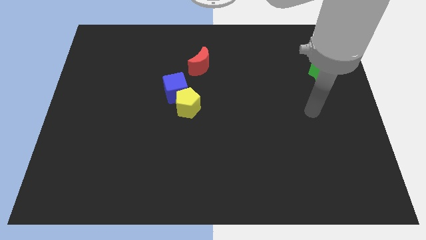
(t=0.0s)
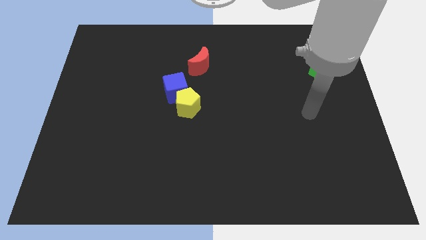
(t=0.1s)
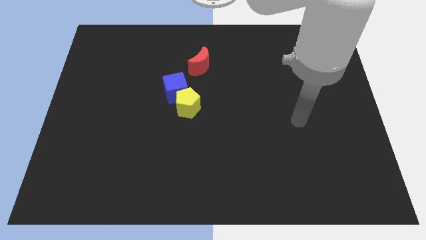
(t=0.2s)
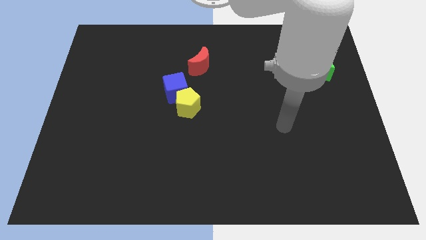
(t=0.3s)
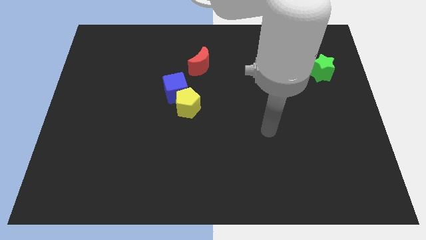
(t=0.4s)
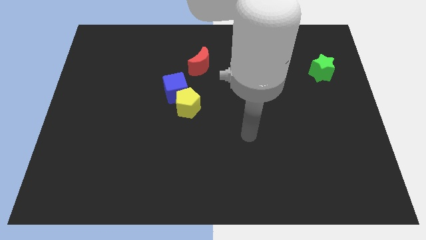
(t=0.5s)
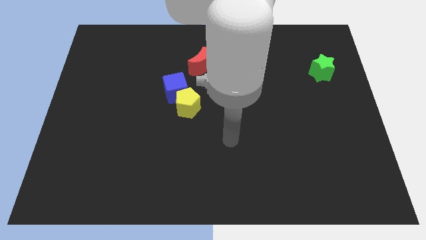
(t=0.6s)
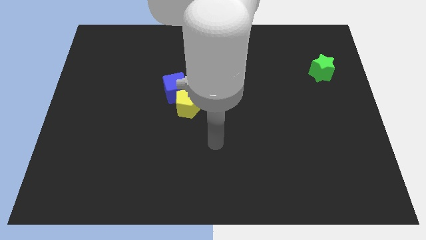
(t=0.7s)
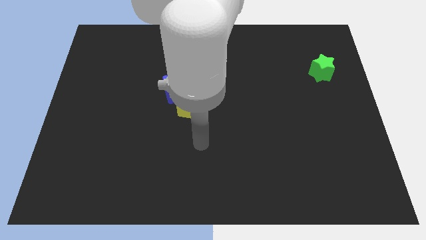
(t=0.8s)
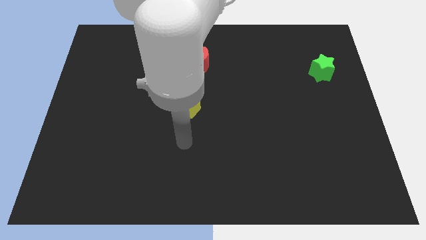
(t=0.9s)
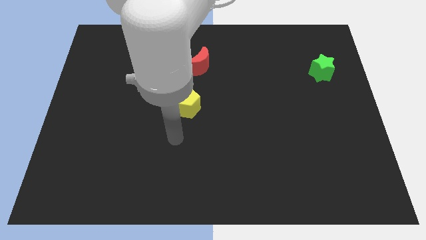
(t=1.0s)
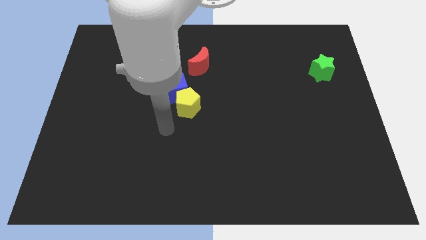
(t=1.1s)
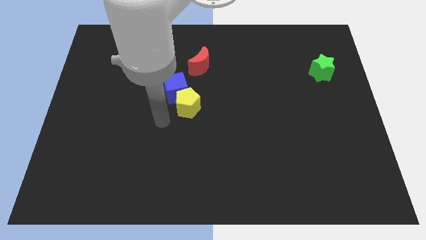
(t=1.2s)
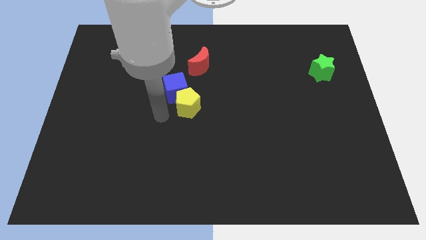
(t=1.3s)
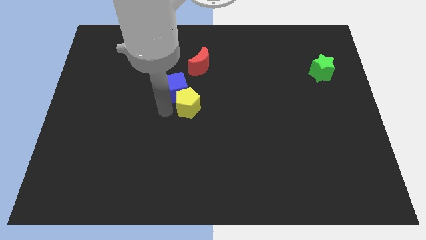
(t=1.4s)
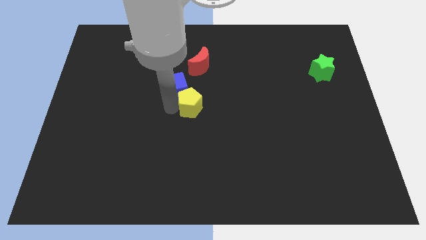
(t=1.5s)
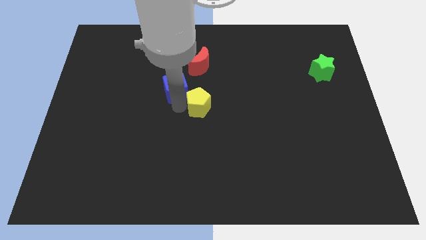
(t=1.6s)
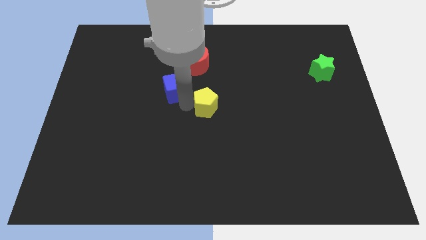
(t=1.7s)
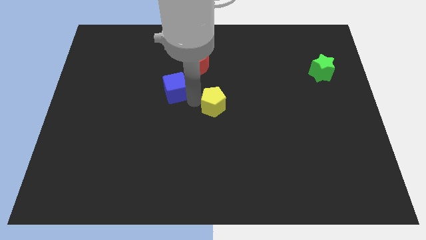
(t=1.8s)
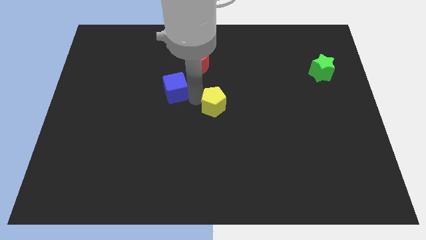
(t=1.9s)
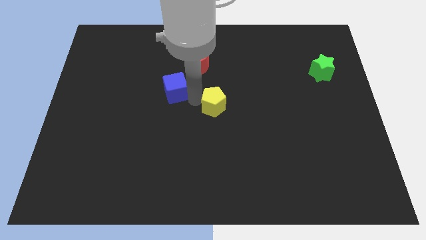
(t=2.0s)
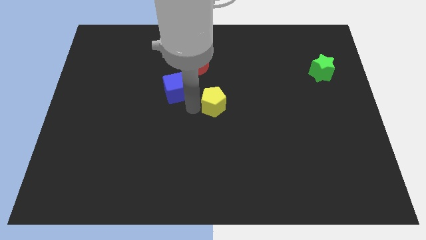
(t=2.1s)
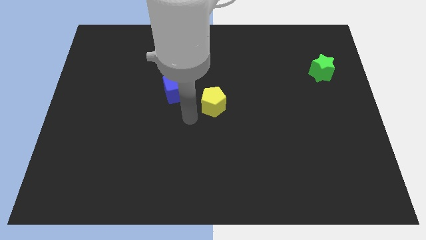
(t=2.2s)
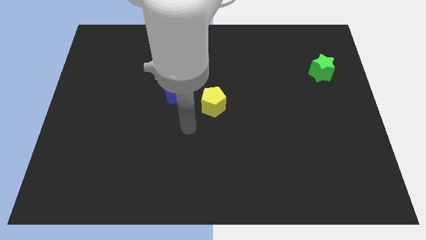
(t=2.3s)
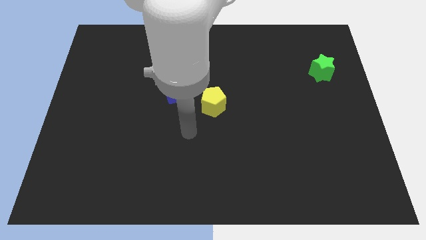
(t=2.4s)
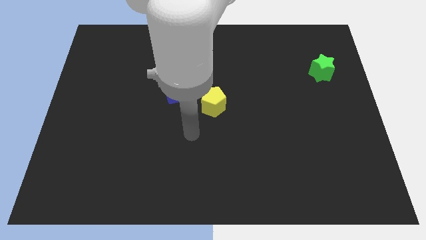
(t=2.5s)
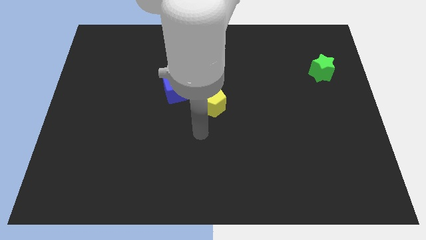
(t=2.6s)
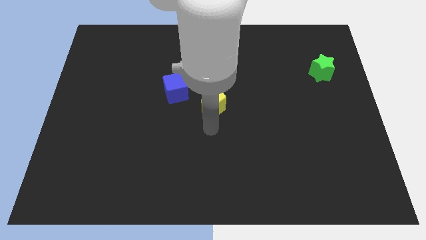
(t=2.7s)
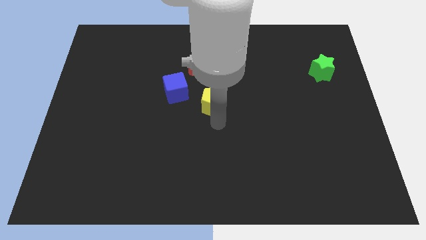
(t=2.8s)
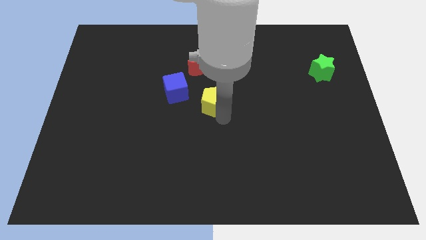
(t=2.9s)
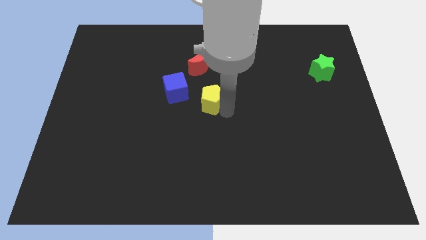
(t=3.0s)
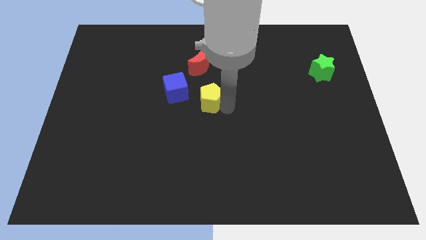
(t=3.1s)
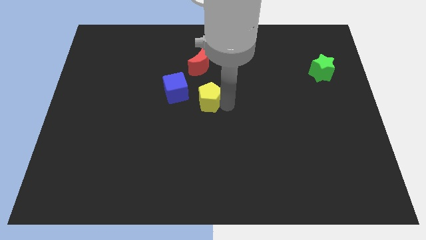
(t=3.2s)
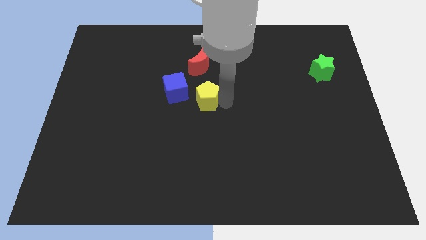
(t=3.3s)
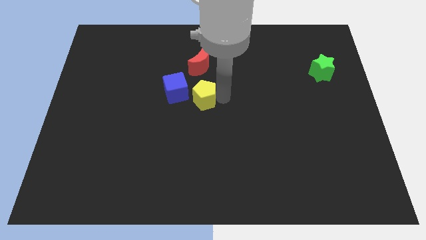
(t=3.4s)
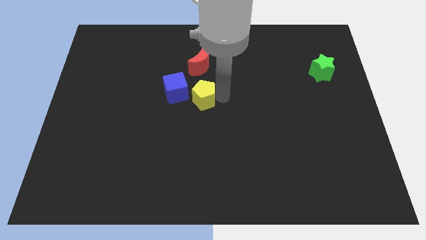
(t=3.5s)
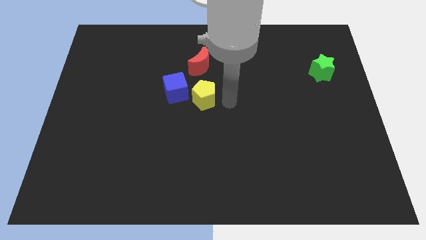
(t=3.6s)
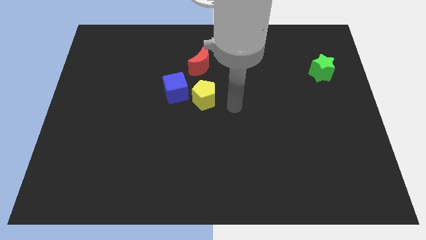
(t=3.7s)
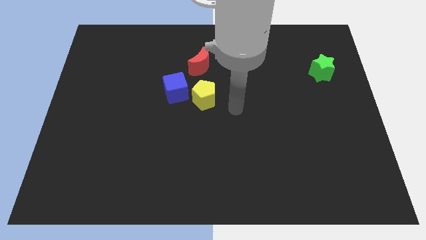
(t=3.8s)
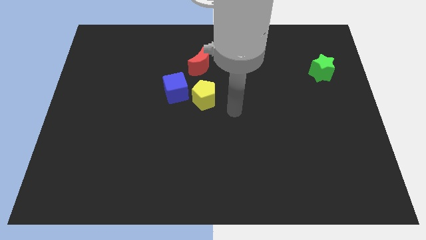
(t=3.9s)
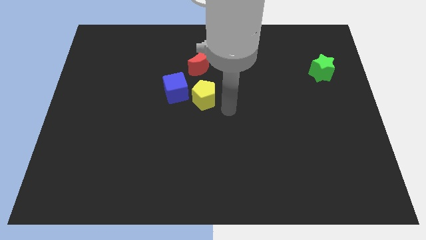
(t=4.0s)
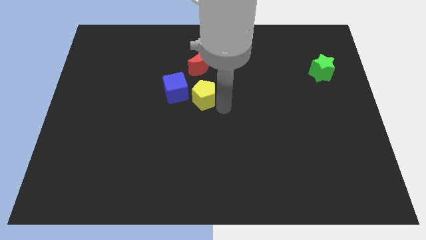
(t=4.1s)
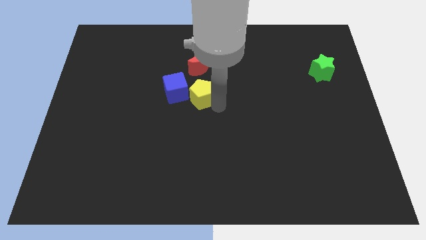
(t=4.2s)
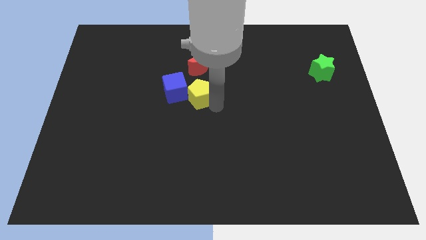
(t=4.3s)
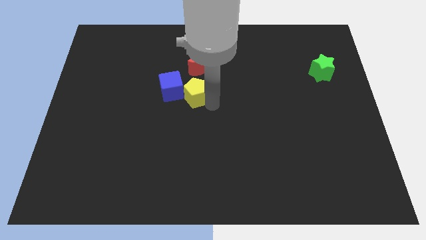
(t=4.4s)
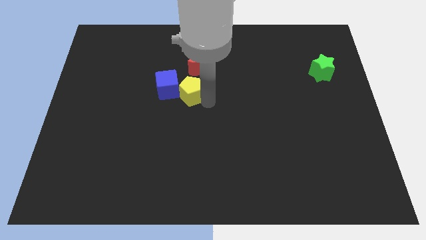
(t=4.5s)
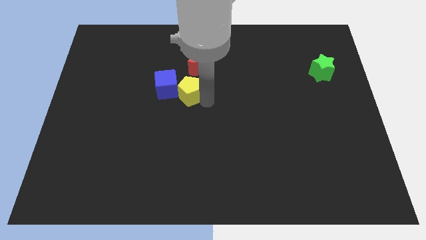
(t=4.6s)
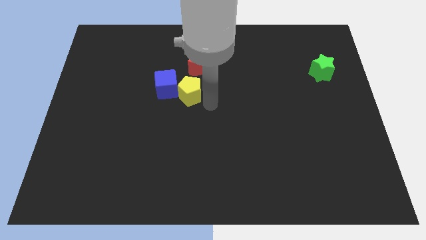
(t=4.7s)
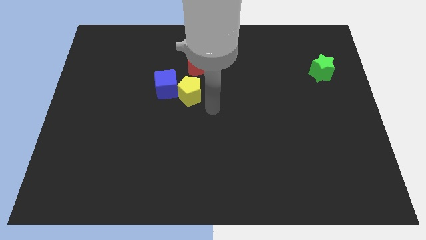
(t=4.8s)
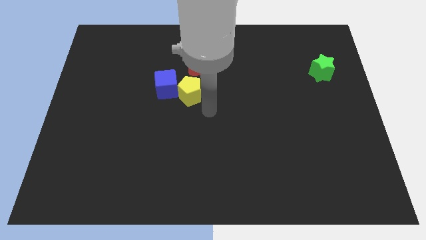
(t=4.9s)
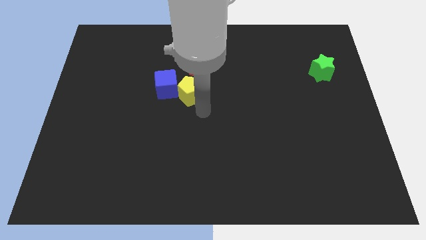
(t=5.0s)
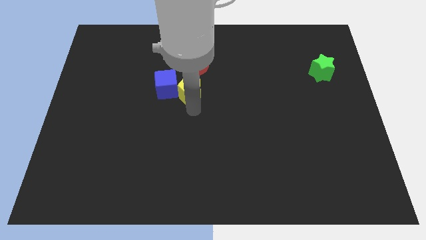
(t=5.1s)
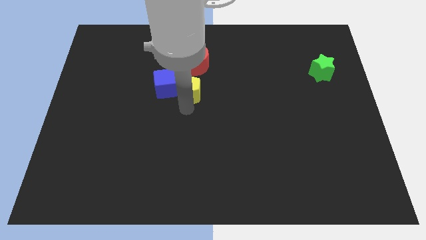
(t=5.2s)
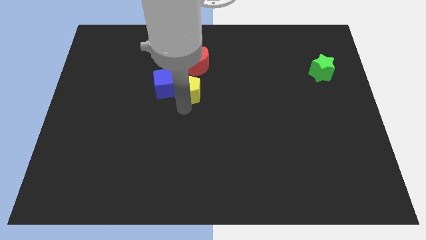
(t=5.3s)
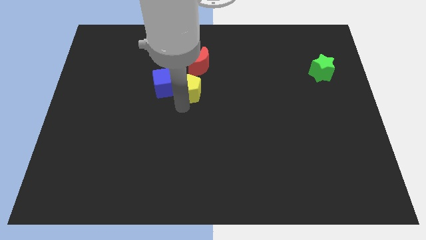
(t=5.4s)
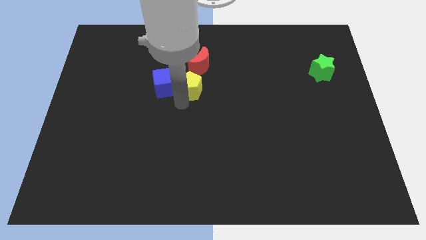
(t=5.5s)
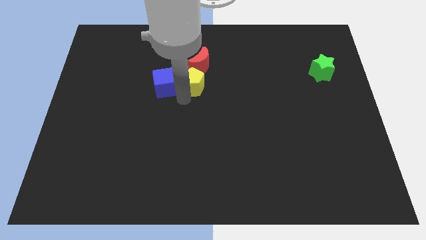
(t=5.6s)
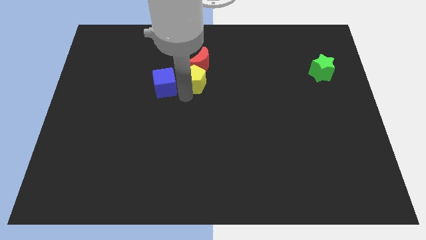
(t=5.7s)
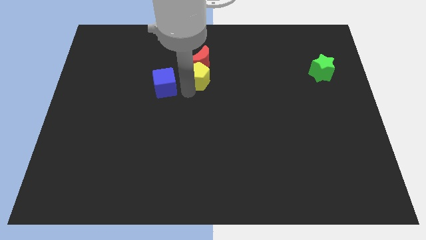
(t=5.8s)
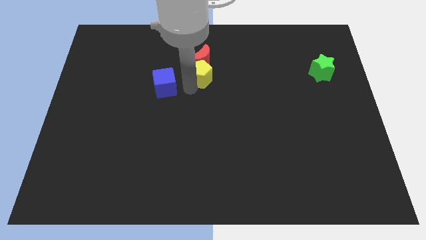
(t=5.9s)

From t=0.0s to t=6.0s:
put the yellow block to the red block

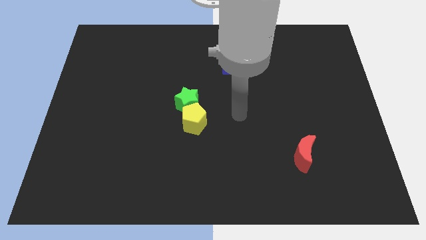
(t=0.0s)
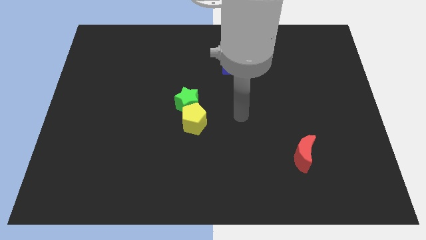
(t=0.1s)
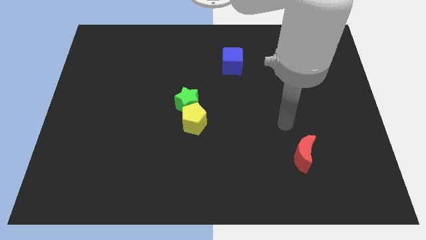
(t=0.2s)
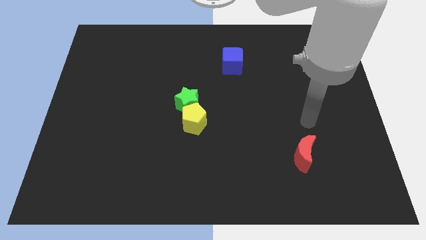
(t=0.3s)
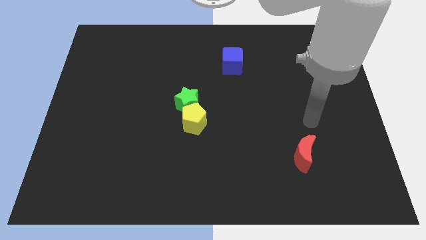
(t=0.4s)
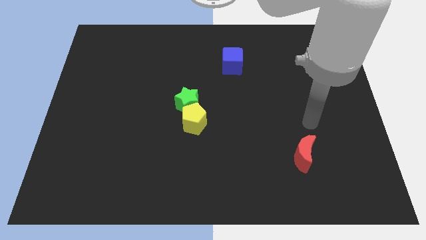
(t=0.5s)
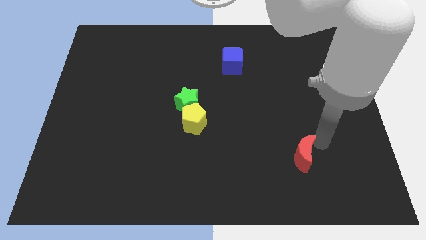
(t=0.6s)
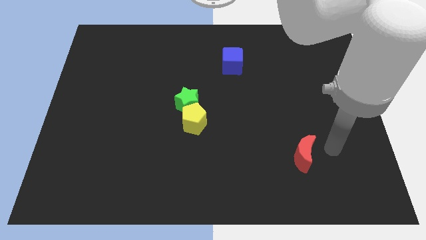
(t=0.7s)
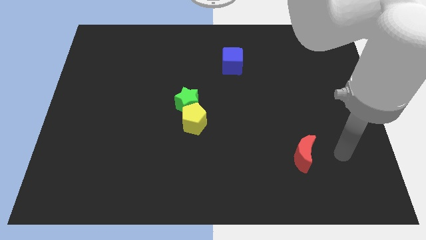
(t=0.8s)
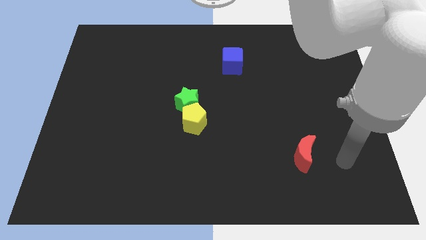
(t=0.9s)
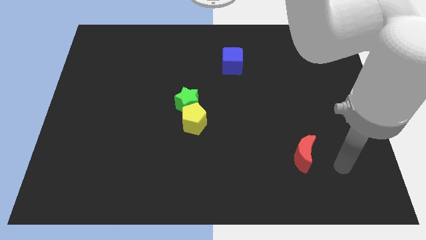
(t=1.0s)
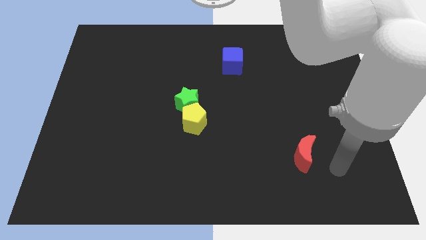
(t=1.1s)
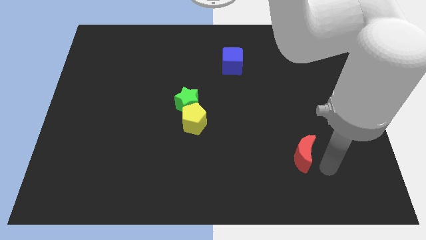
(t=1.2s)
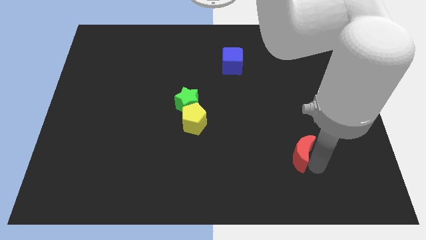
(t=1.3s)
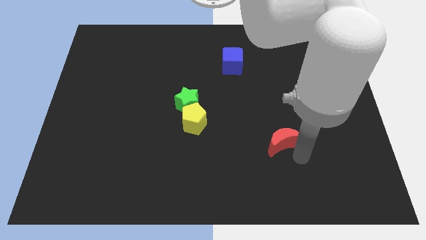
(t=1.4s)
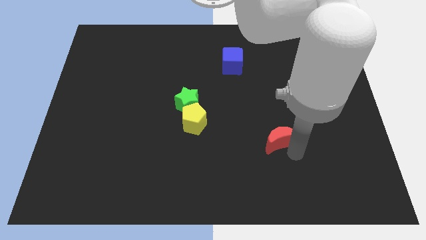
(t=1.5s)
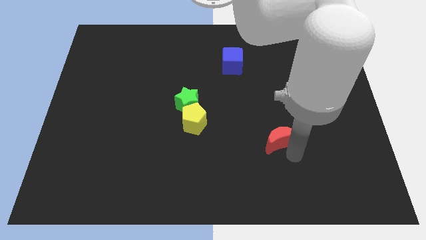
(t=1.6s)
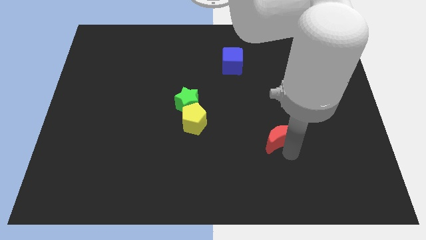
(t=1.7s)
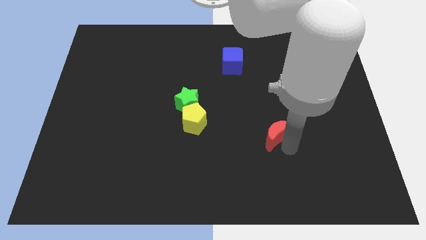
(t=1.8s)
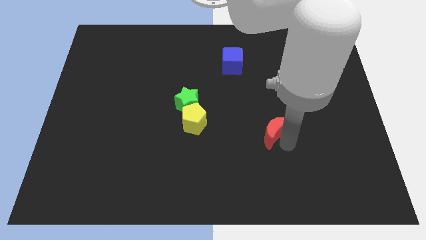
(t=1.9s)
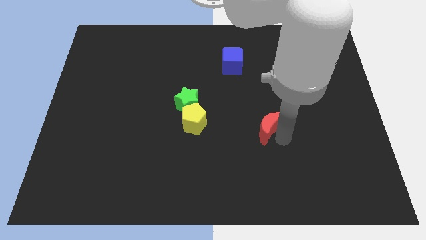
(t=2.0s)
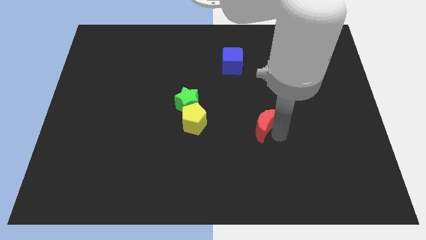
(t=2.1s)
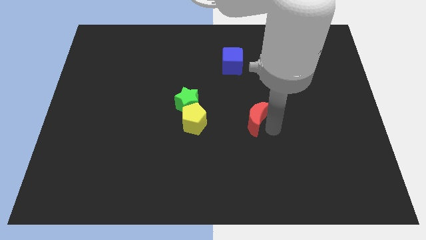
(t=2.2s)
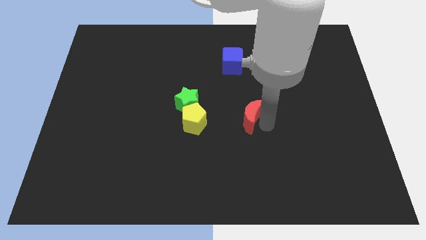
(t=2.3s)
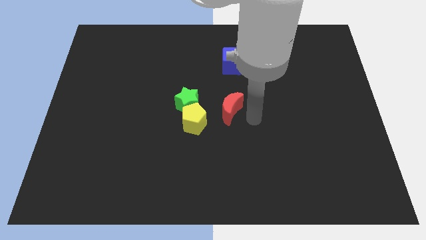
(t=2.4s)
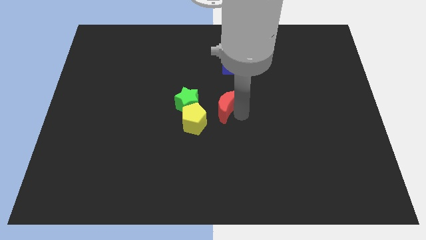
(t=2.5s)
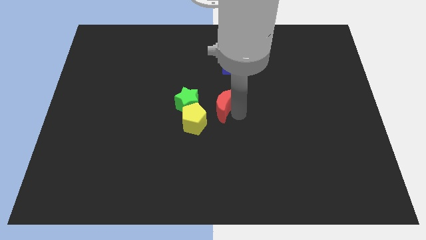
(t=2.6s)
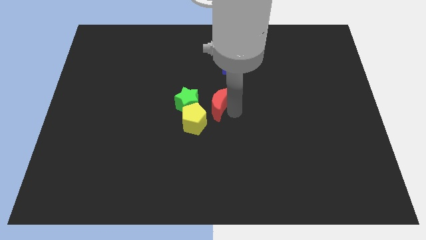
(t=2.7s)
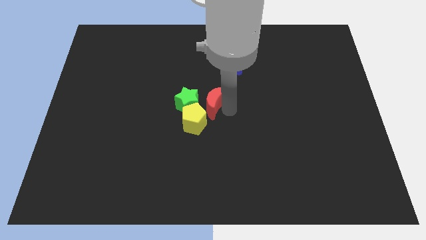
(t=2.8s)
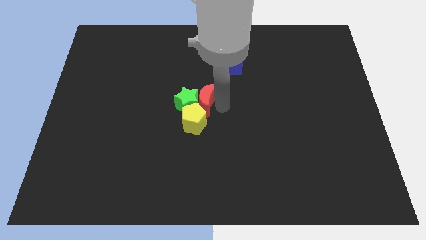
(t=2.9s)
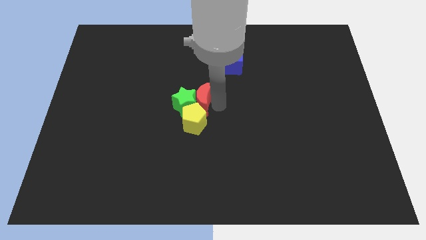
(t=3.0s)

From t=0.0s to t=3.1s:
push the red moon close to the green star
